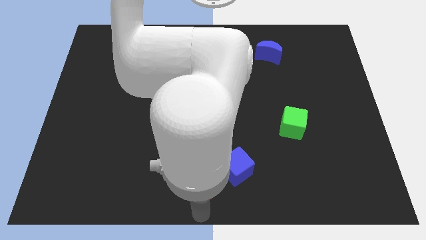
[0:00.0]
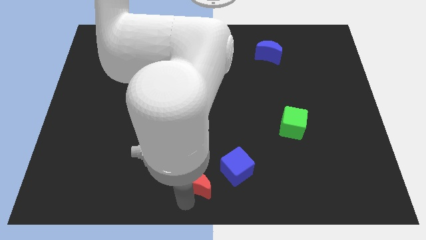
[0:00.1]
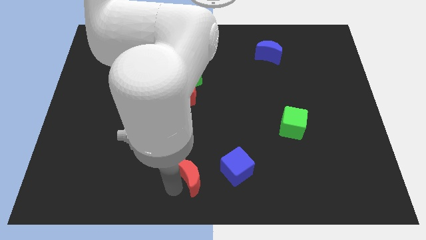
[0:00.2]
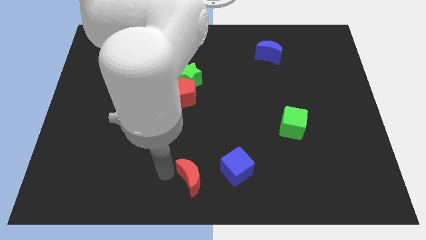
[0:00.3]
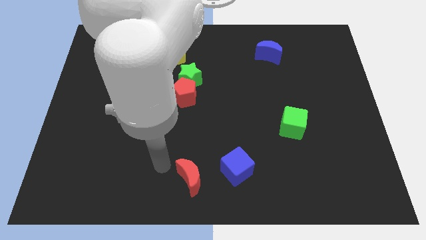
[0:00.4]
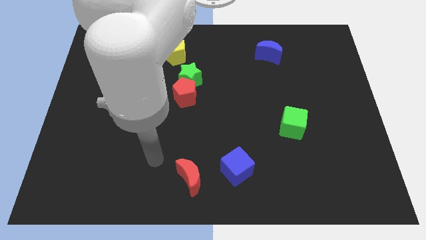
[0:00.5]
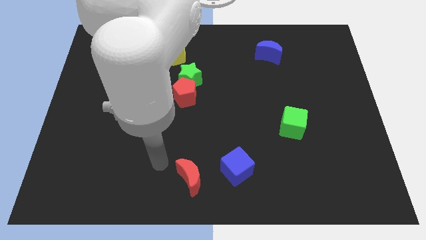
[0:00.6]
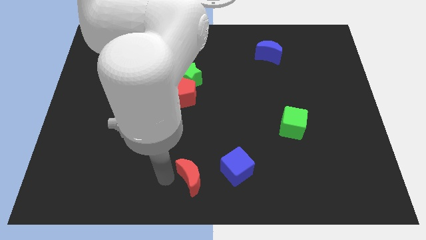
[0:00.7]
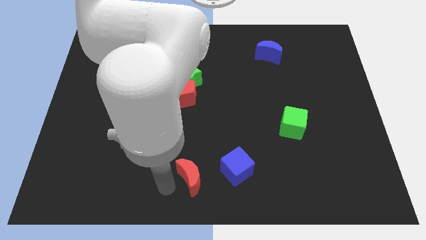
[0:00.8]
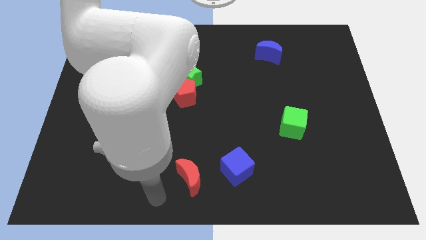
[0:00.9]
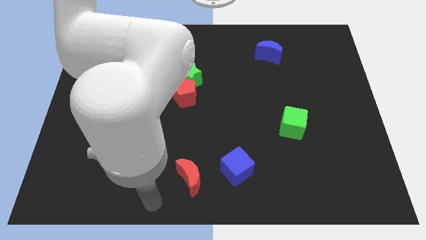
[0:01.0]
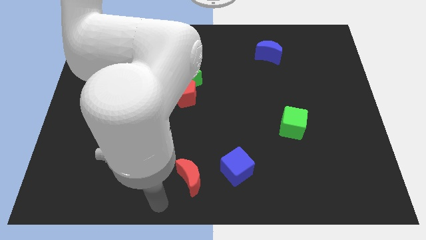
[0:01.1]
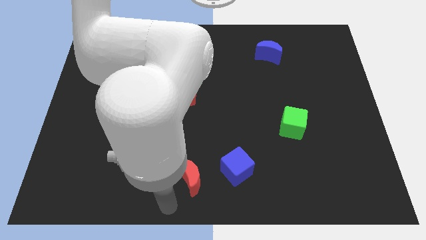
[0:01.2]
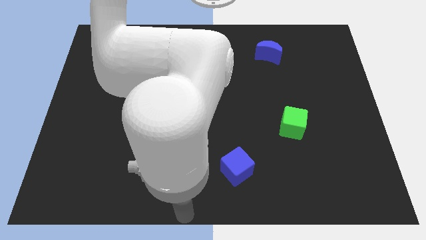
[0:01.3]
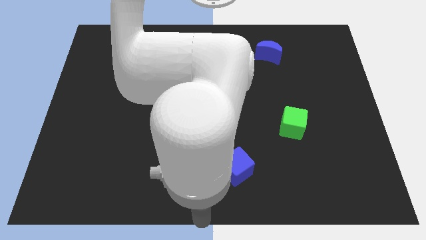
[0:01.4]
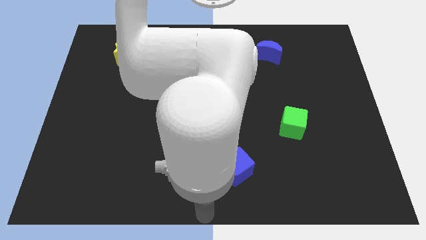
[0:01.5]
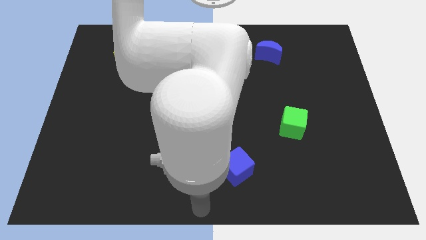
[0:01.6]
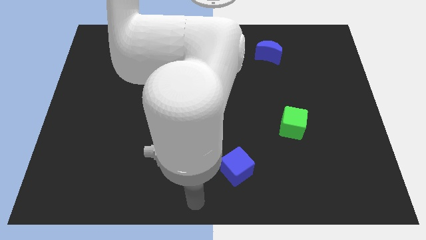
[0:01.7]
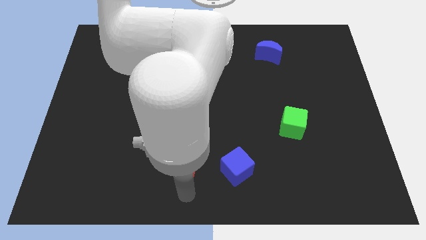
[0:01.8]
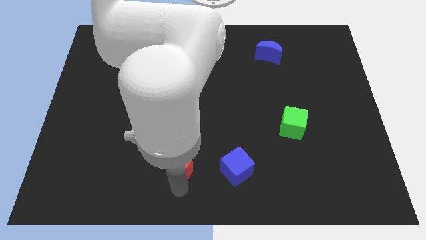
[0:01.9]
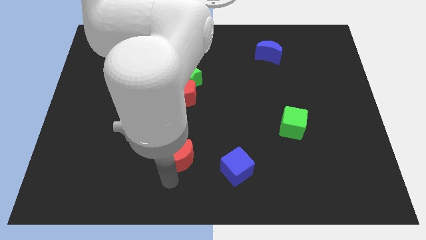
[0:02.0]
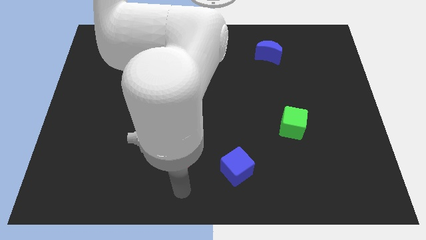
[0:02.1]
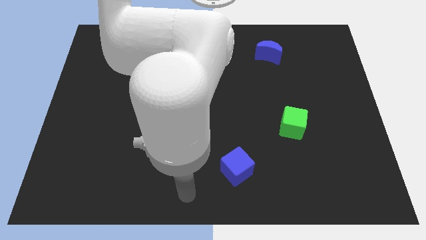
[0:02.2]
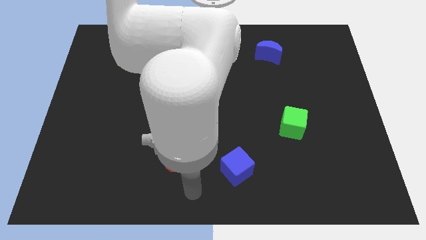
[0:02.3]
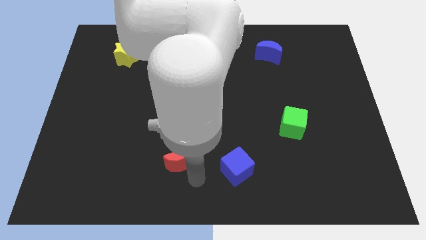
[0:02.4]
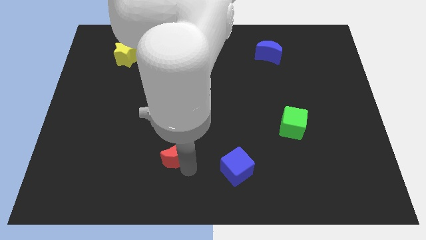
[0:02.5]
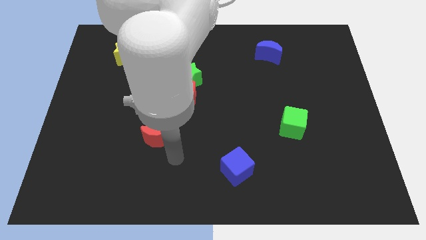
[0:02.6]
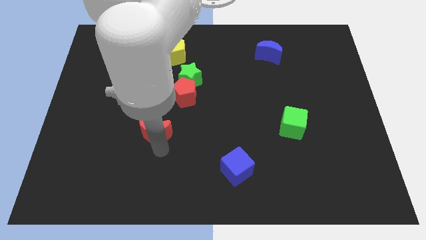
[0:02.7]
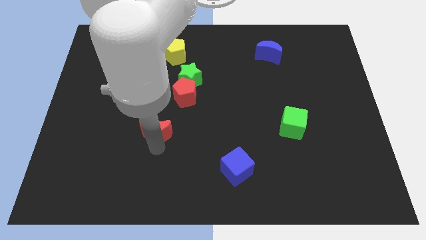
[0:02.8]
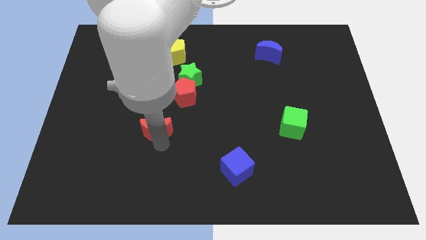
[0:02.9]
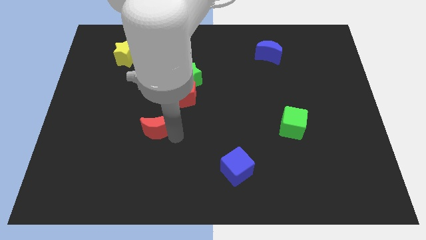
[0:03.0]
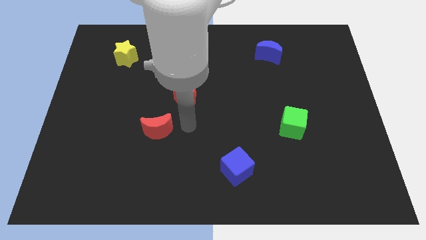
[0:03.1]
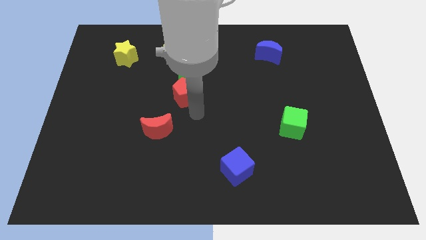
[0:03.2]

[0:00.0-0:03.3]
push the red crescent towards the red pentagon

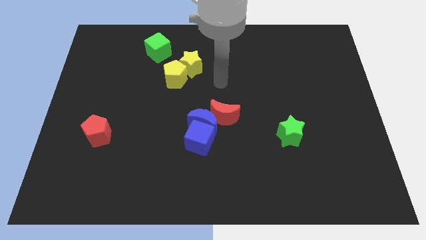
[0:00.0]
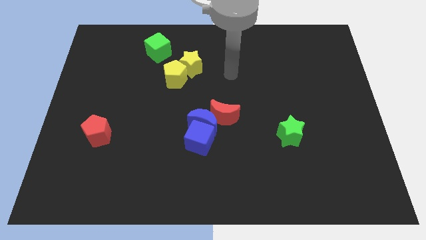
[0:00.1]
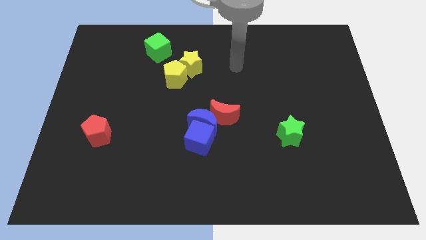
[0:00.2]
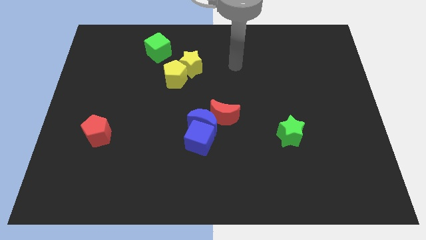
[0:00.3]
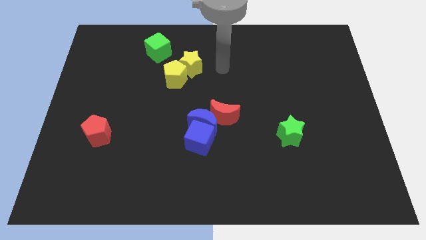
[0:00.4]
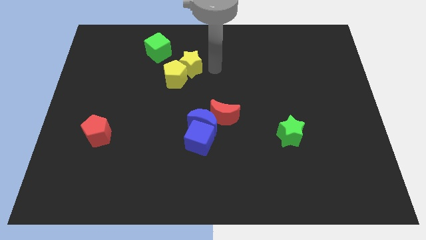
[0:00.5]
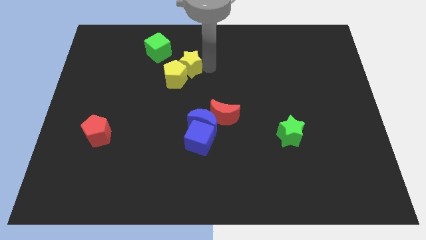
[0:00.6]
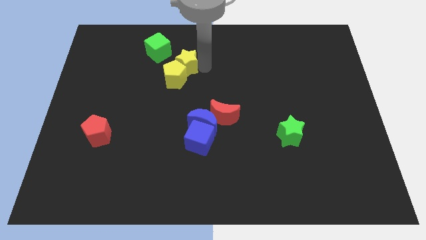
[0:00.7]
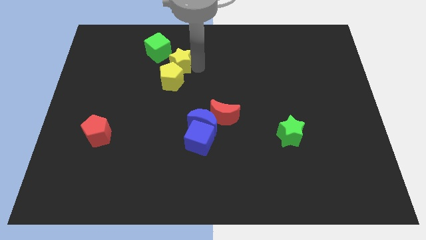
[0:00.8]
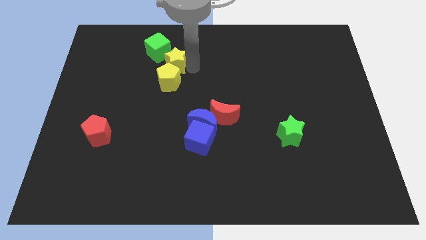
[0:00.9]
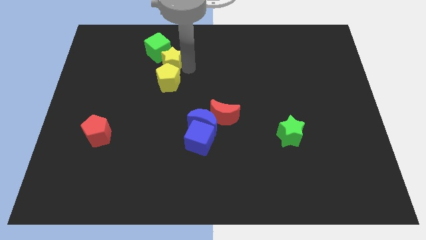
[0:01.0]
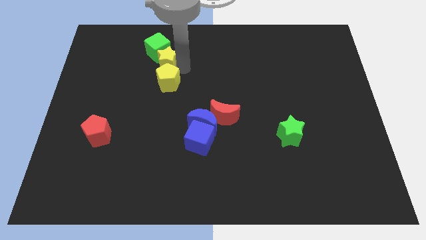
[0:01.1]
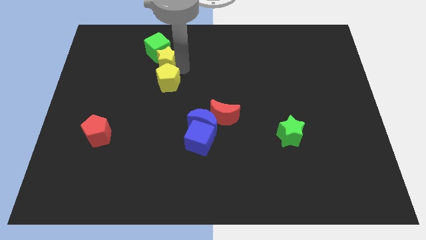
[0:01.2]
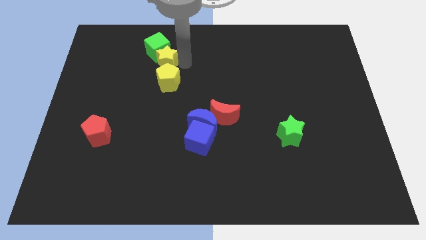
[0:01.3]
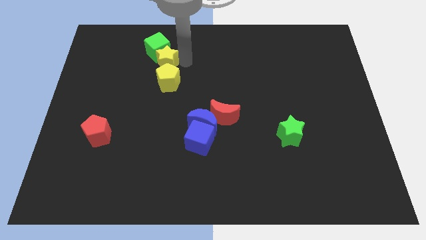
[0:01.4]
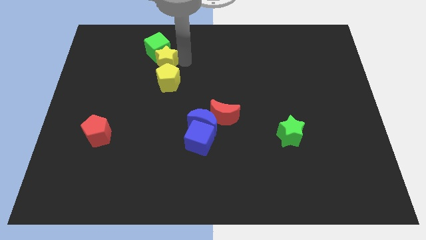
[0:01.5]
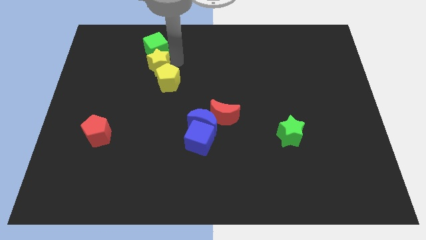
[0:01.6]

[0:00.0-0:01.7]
push the yellow star slightly to the left

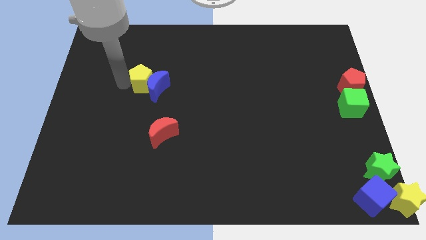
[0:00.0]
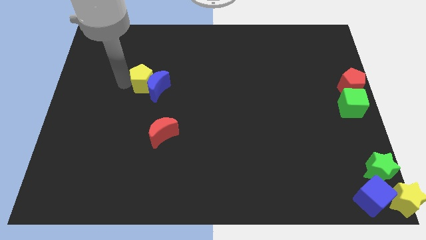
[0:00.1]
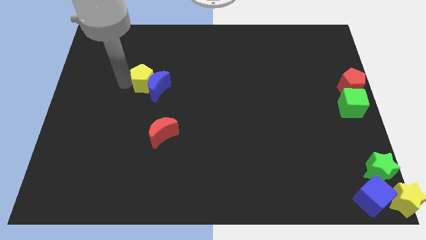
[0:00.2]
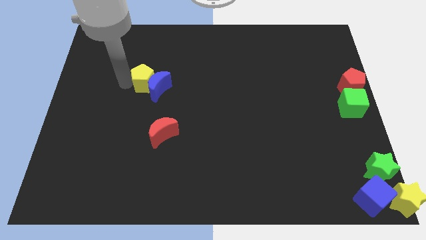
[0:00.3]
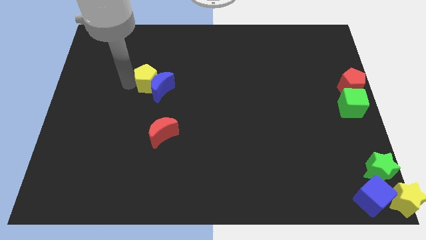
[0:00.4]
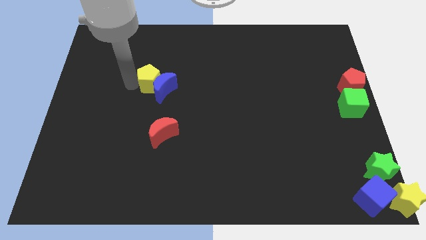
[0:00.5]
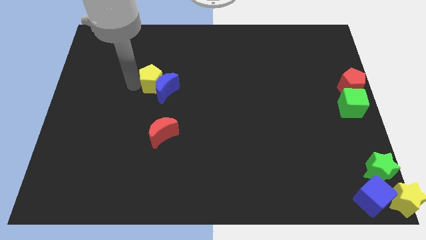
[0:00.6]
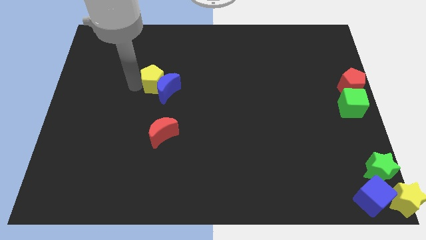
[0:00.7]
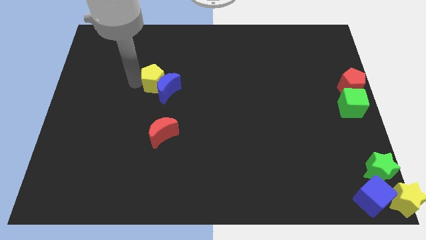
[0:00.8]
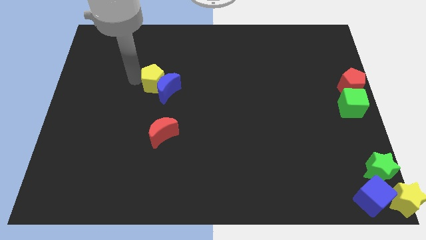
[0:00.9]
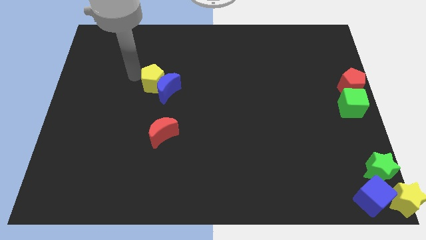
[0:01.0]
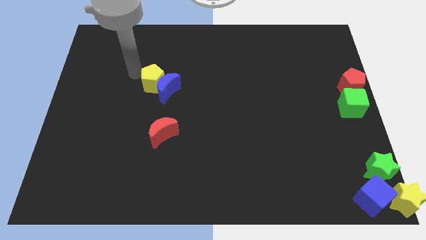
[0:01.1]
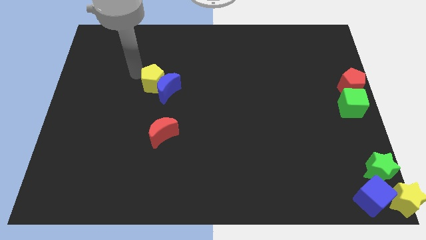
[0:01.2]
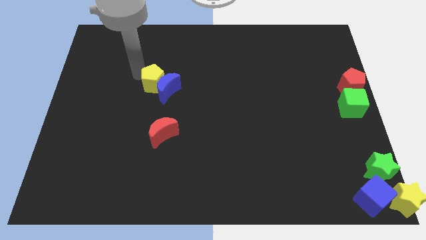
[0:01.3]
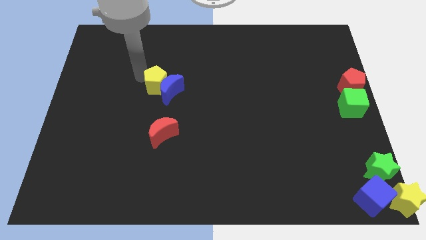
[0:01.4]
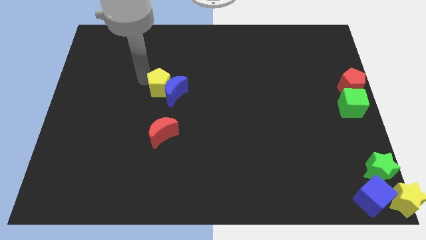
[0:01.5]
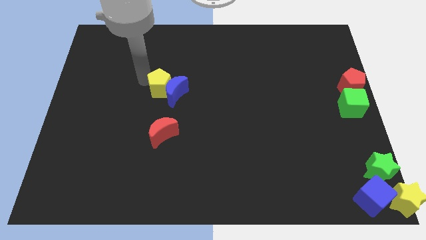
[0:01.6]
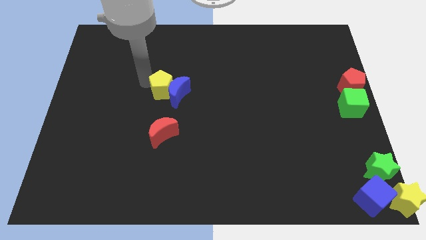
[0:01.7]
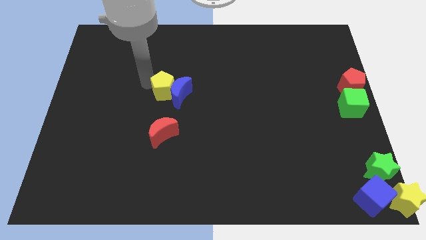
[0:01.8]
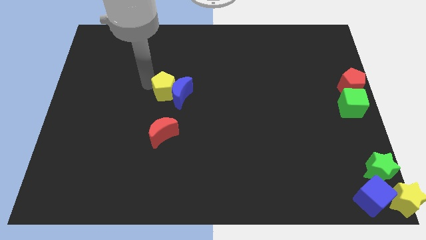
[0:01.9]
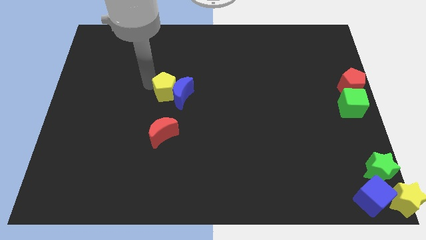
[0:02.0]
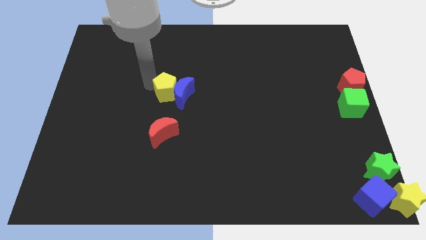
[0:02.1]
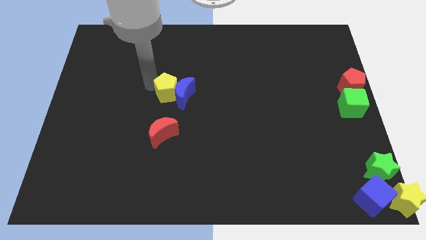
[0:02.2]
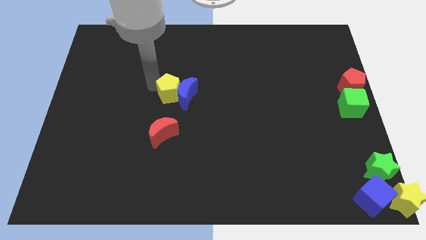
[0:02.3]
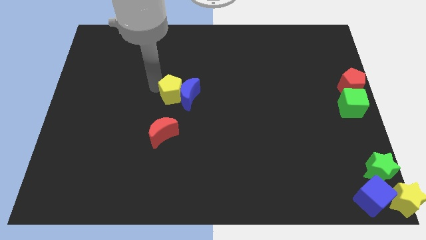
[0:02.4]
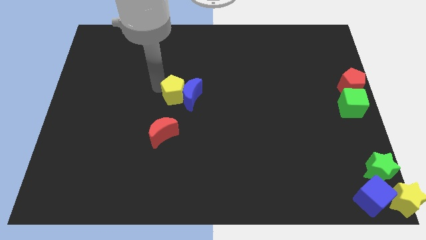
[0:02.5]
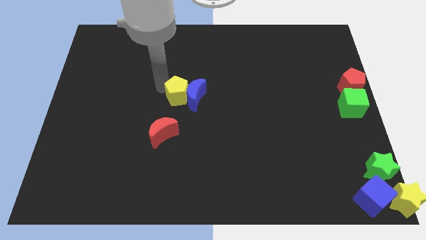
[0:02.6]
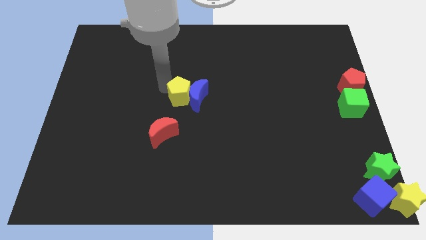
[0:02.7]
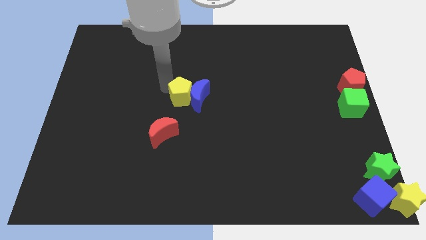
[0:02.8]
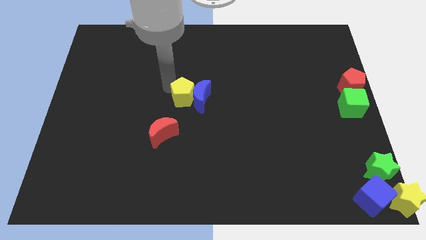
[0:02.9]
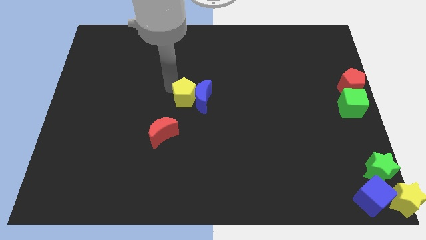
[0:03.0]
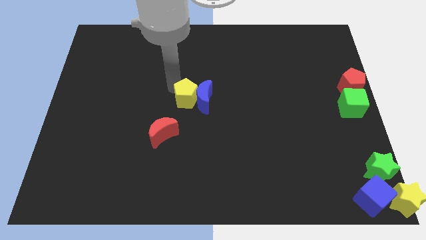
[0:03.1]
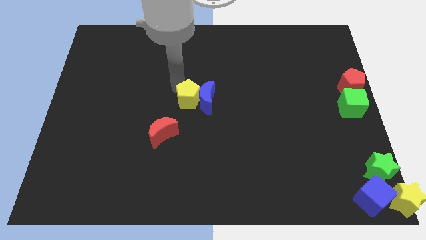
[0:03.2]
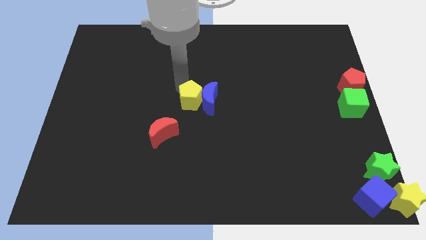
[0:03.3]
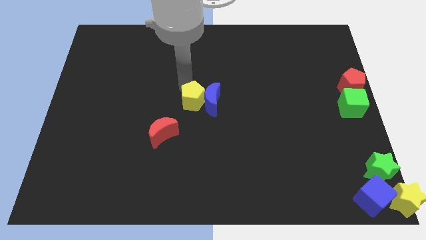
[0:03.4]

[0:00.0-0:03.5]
move yellow pentagon and blue crescent to the center of the board

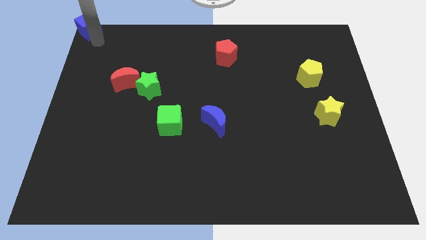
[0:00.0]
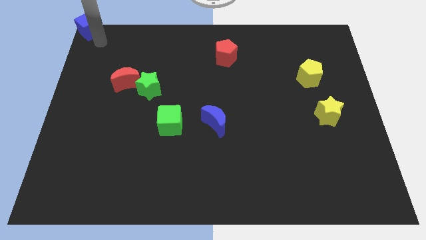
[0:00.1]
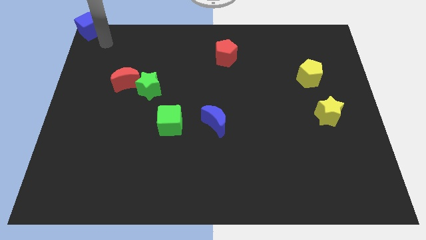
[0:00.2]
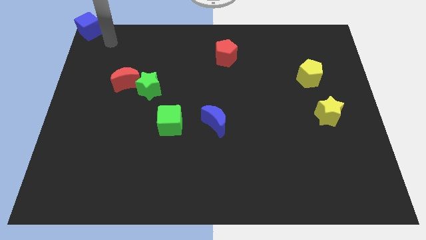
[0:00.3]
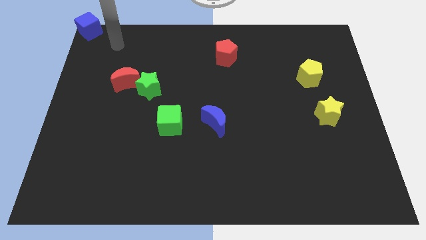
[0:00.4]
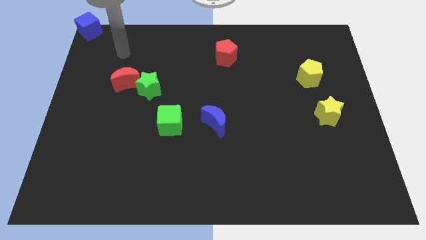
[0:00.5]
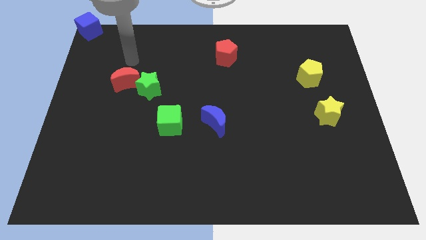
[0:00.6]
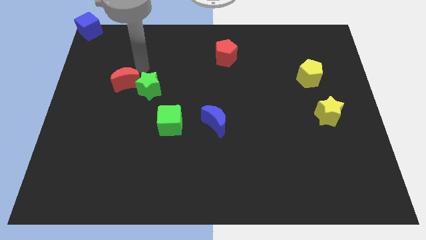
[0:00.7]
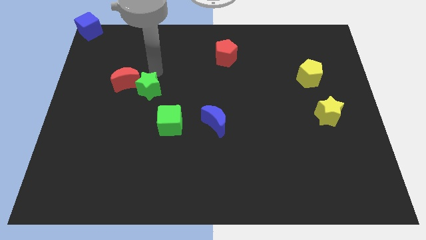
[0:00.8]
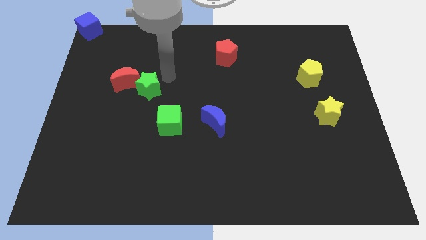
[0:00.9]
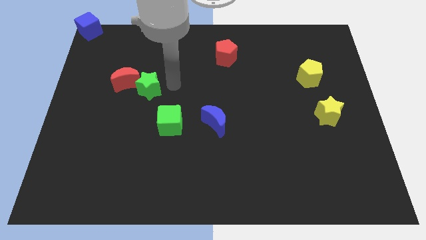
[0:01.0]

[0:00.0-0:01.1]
slightly push the blue cube to the top left corner
